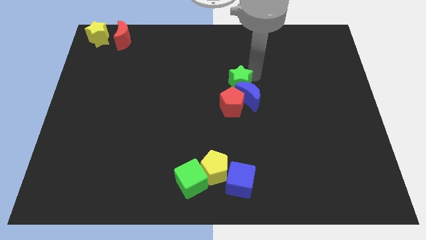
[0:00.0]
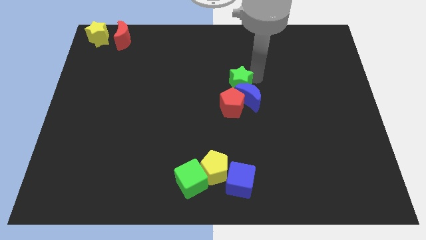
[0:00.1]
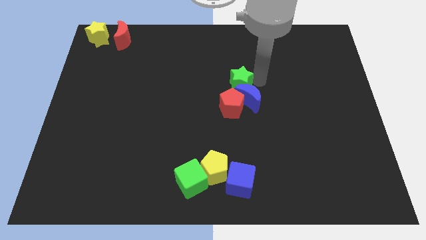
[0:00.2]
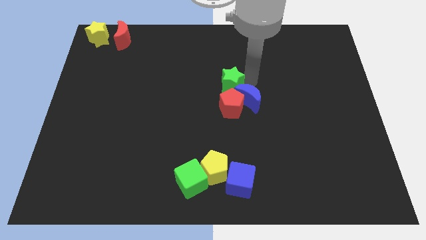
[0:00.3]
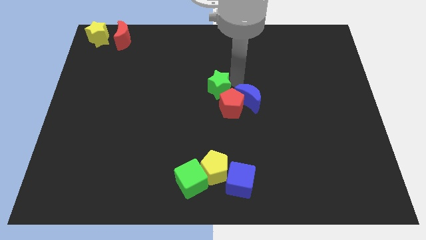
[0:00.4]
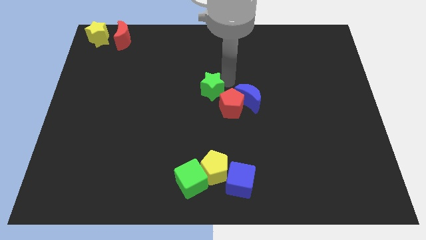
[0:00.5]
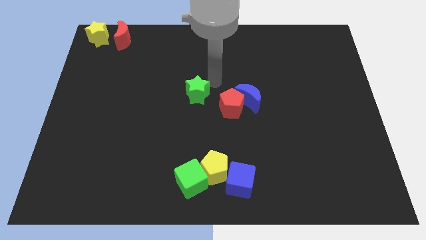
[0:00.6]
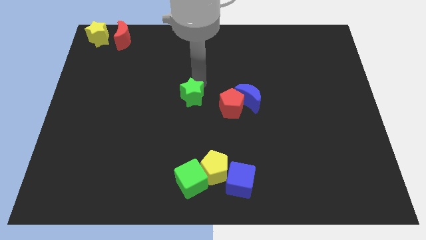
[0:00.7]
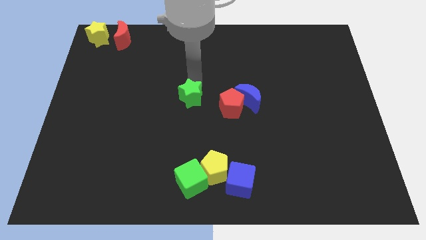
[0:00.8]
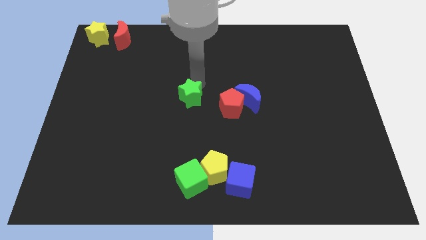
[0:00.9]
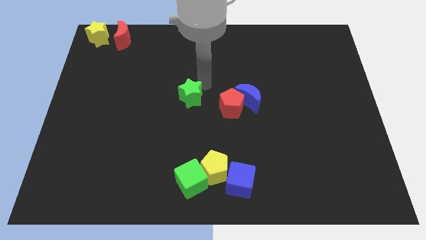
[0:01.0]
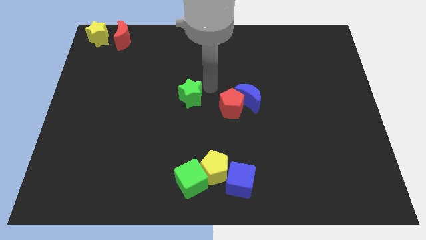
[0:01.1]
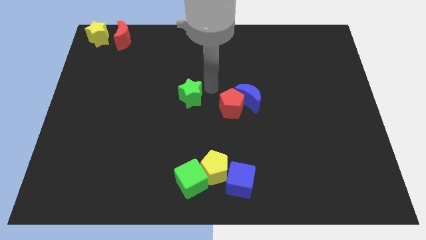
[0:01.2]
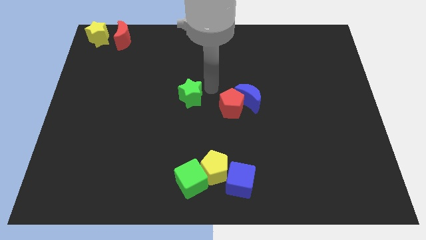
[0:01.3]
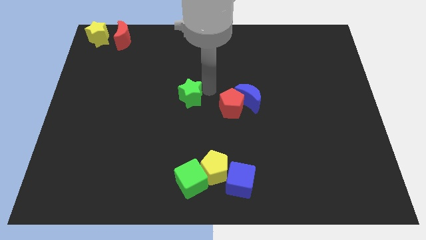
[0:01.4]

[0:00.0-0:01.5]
separate the green star from the red pentagon

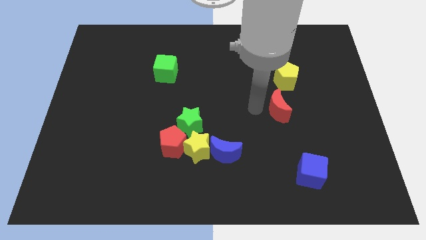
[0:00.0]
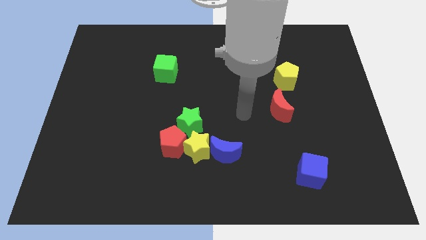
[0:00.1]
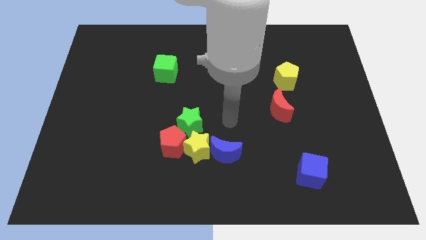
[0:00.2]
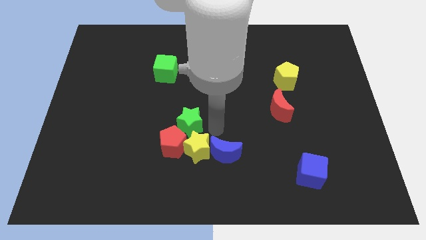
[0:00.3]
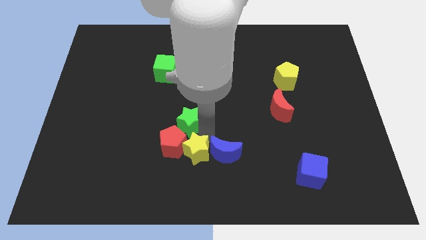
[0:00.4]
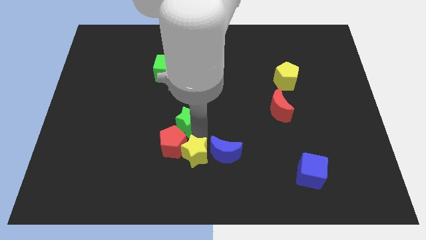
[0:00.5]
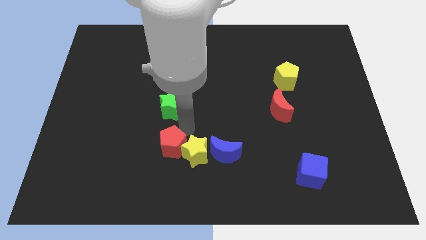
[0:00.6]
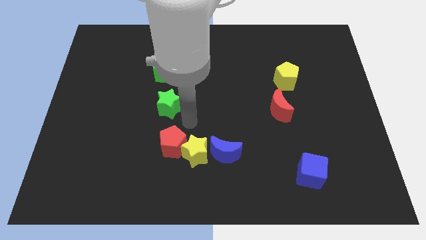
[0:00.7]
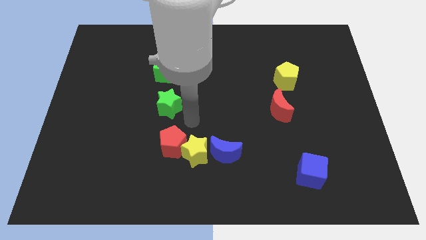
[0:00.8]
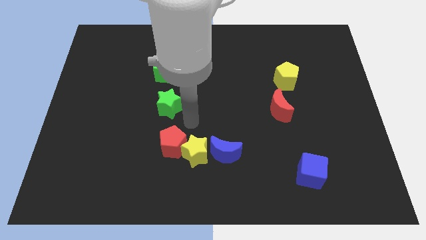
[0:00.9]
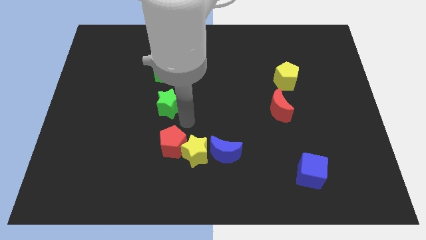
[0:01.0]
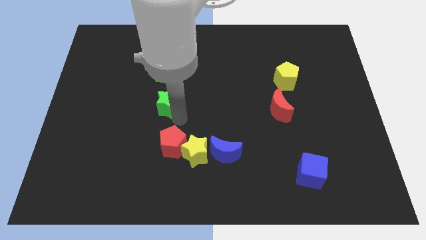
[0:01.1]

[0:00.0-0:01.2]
move the green star away from the yellow star

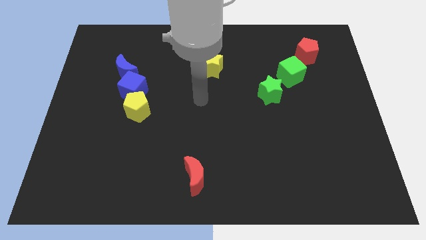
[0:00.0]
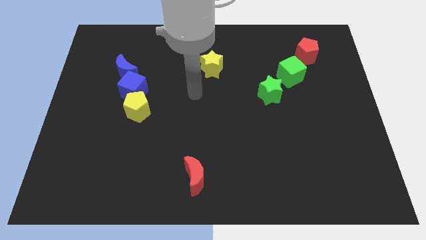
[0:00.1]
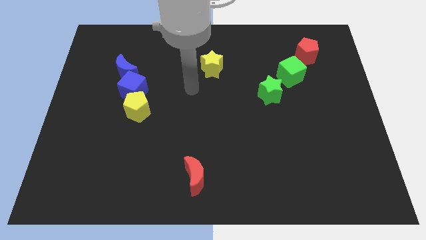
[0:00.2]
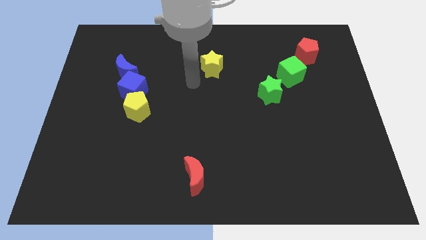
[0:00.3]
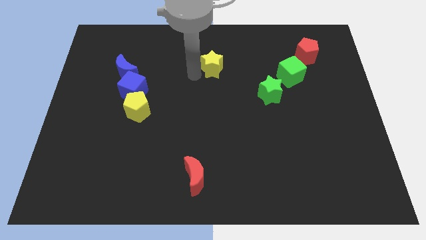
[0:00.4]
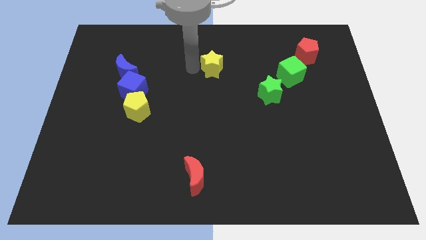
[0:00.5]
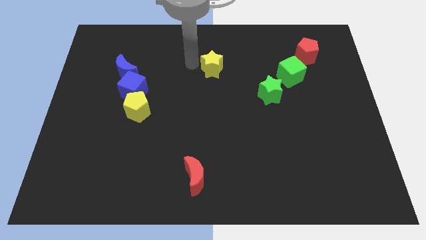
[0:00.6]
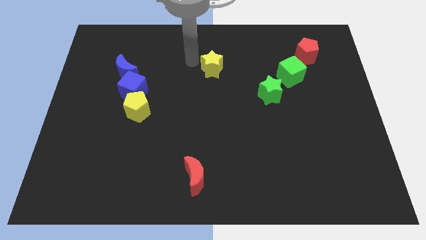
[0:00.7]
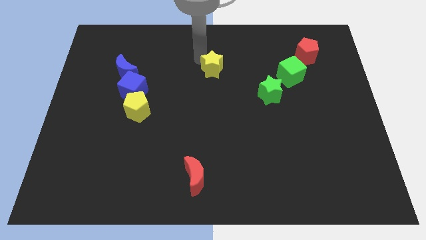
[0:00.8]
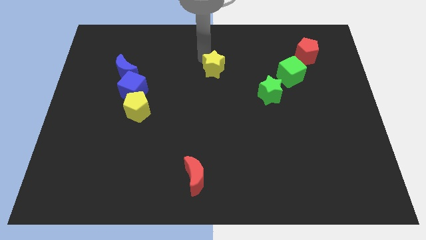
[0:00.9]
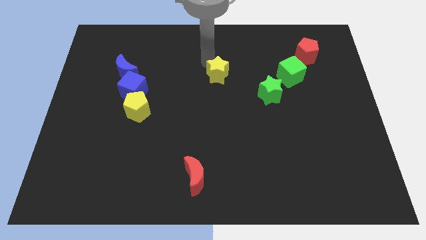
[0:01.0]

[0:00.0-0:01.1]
touch the yellow star

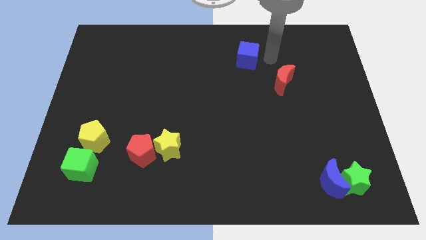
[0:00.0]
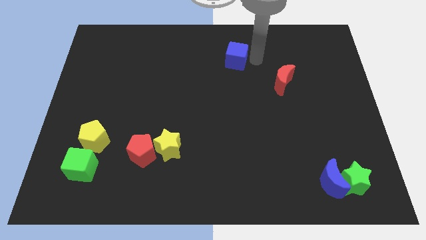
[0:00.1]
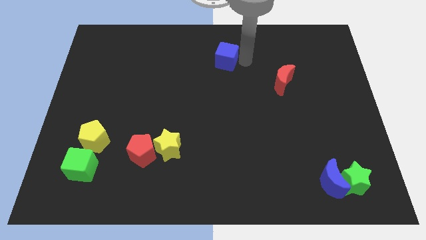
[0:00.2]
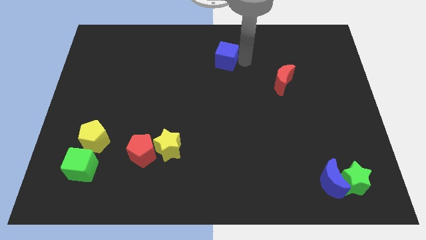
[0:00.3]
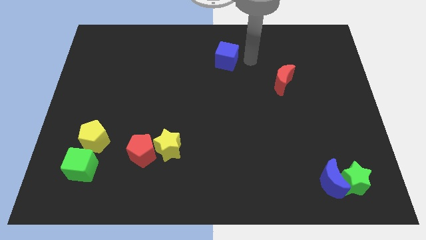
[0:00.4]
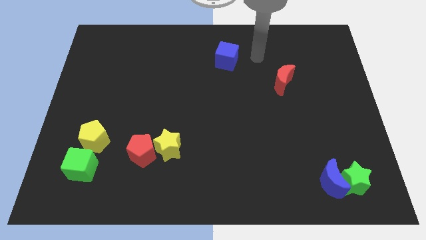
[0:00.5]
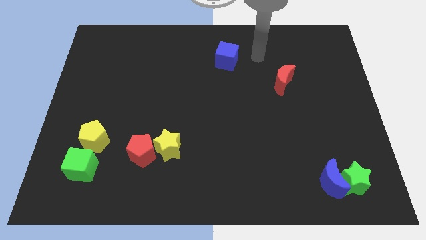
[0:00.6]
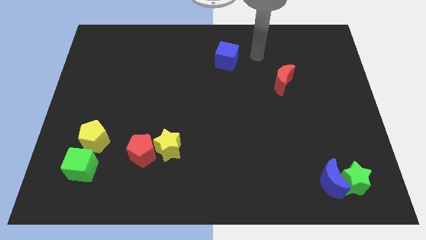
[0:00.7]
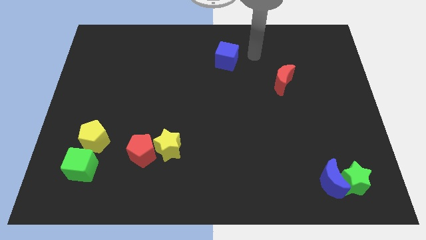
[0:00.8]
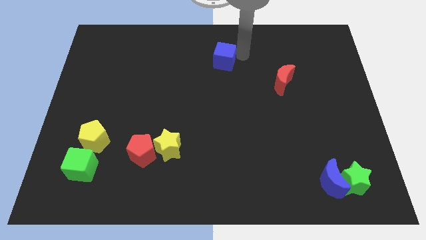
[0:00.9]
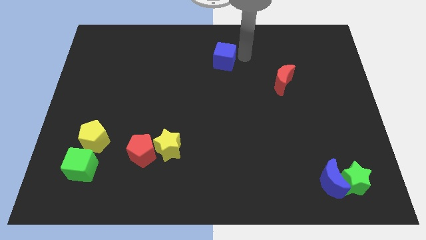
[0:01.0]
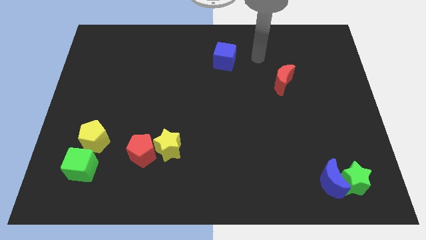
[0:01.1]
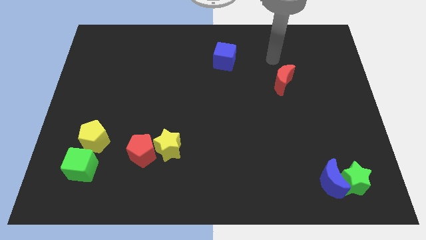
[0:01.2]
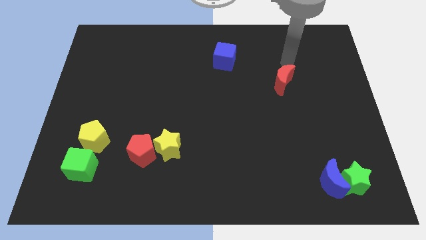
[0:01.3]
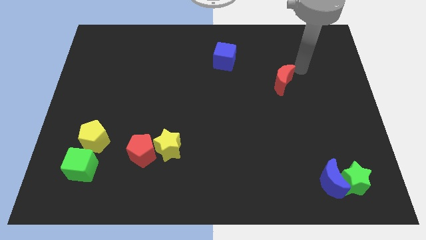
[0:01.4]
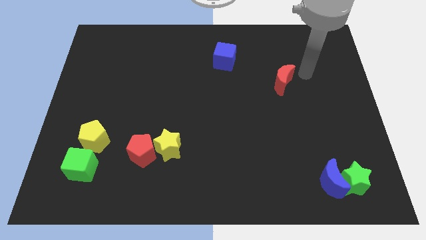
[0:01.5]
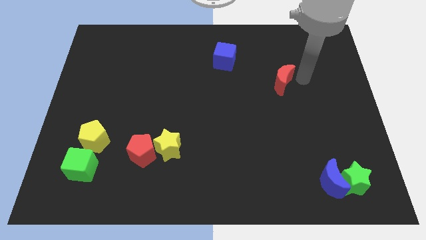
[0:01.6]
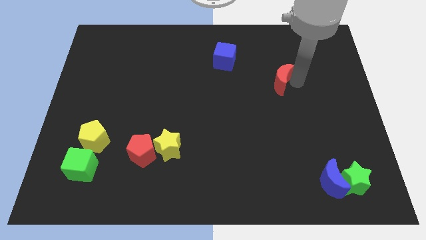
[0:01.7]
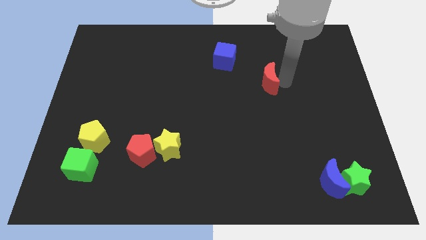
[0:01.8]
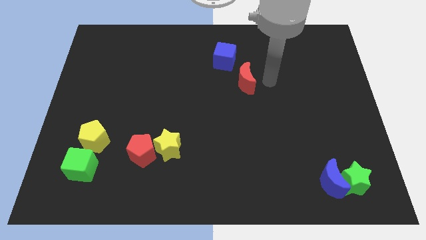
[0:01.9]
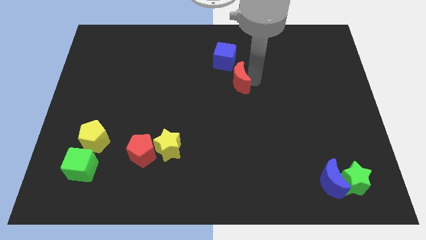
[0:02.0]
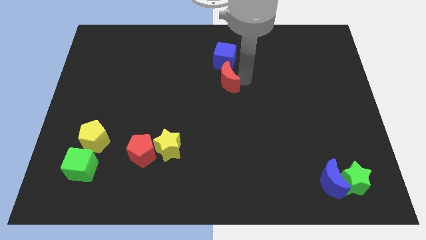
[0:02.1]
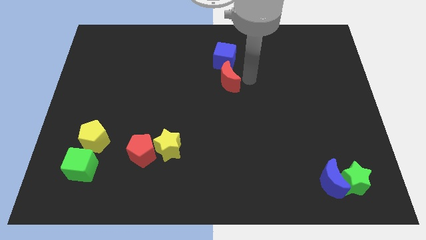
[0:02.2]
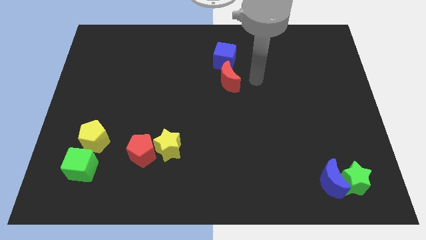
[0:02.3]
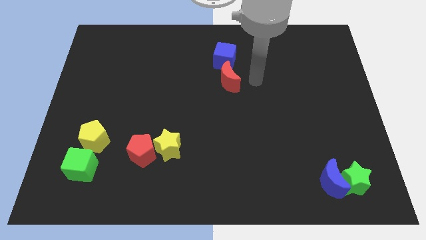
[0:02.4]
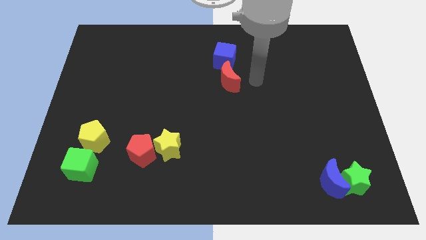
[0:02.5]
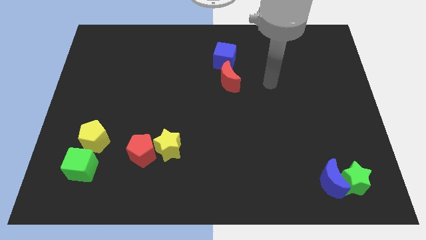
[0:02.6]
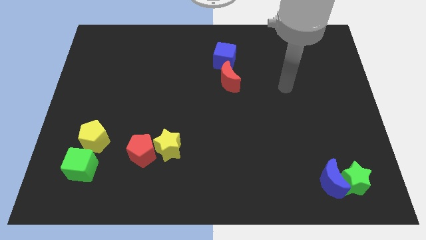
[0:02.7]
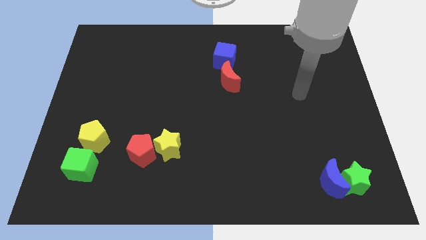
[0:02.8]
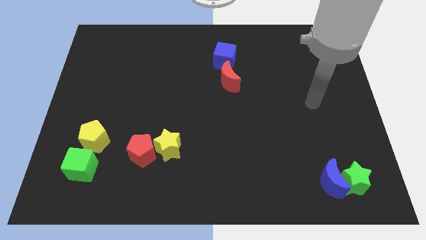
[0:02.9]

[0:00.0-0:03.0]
push the blue cube and red moon towards the left side of the board

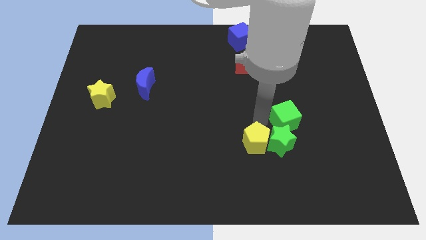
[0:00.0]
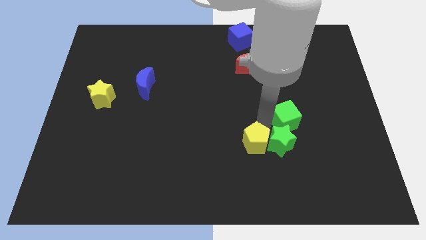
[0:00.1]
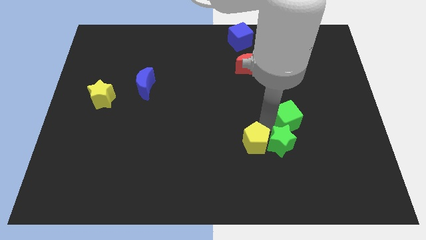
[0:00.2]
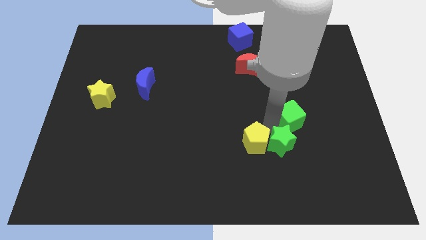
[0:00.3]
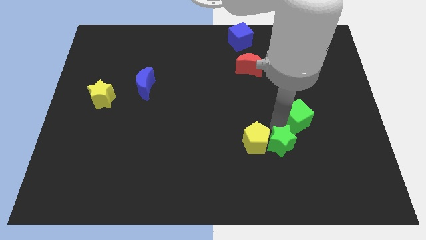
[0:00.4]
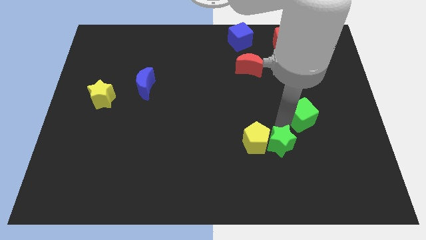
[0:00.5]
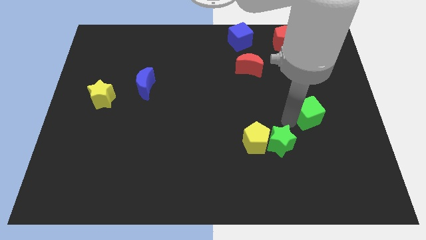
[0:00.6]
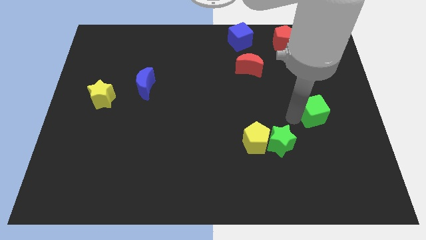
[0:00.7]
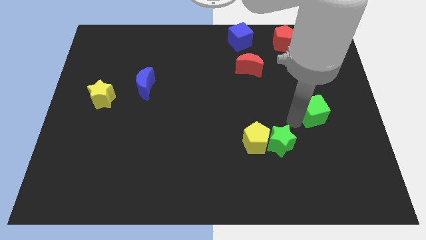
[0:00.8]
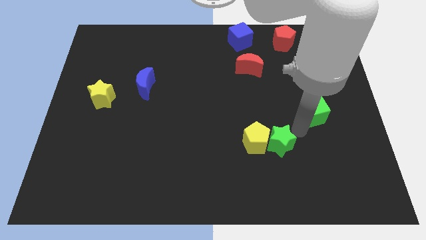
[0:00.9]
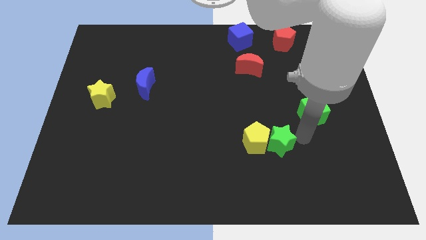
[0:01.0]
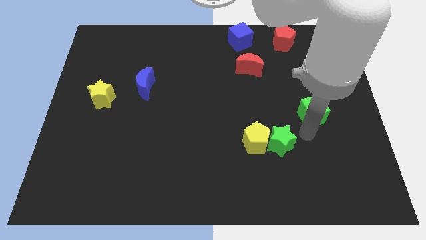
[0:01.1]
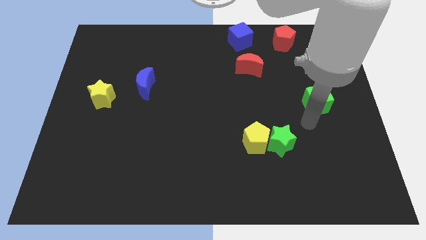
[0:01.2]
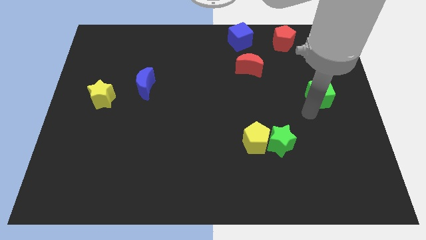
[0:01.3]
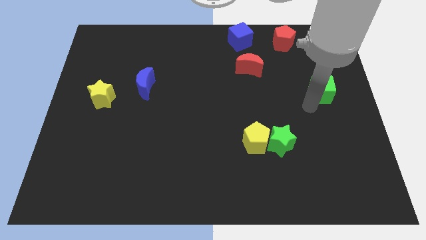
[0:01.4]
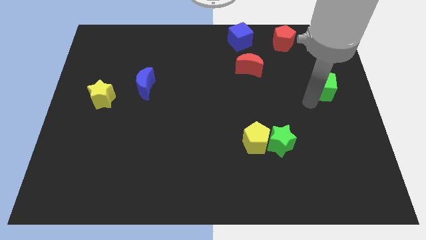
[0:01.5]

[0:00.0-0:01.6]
separate the green cube from green star

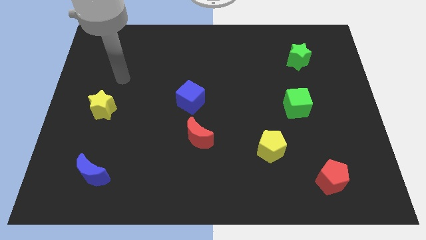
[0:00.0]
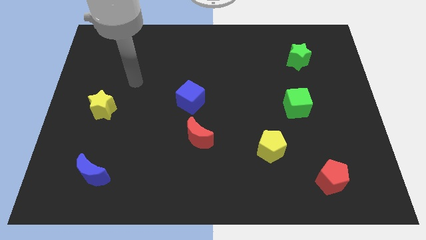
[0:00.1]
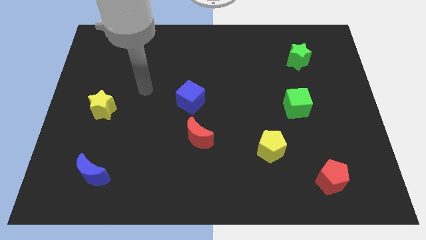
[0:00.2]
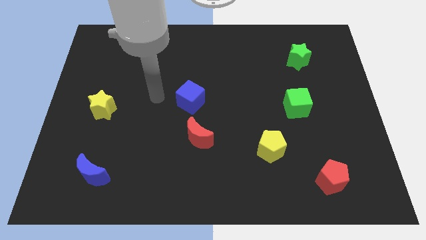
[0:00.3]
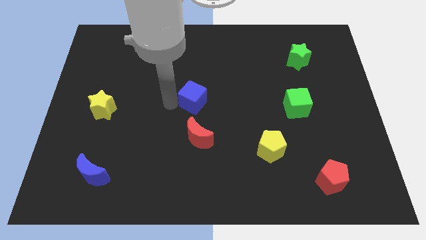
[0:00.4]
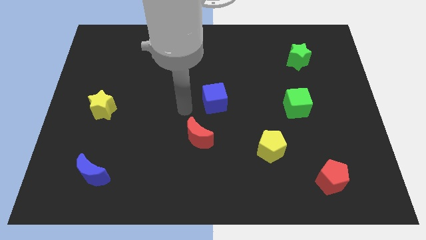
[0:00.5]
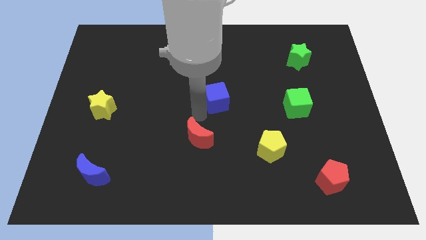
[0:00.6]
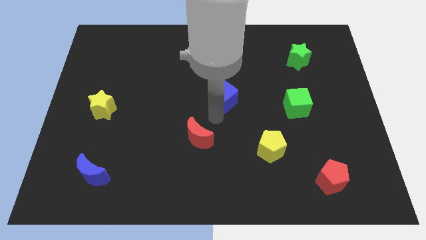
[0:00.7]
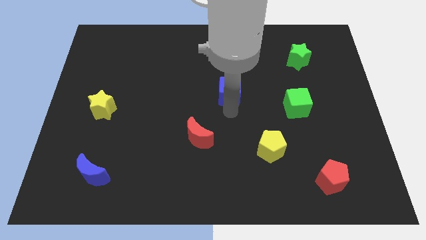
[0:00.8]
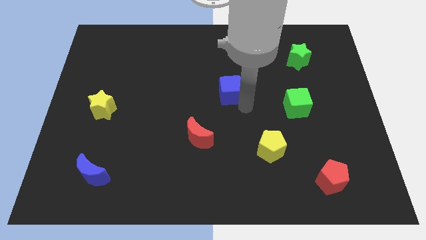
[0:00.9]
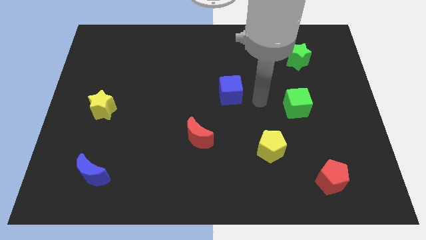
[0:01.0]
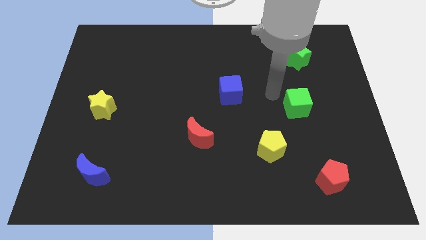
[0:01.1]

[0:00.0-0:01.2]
slightly push the blue cube to the top of the board
